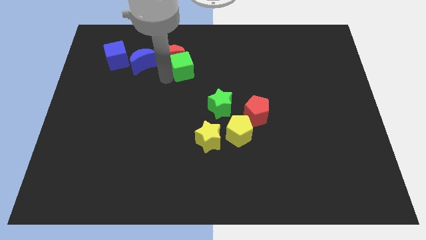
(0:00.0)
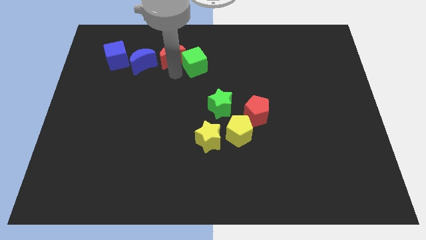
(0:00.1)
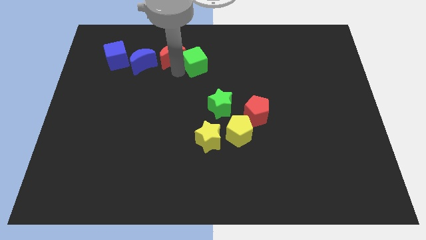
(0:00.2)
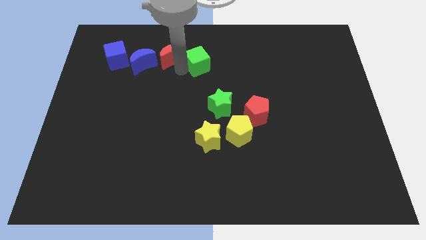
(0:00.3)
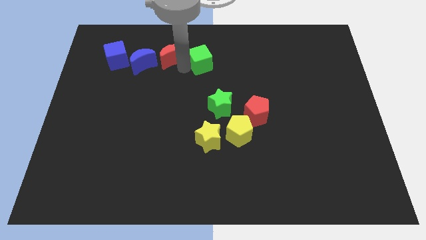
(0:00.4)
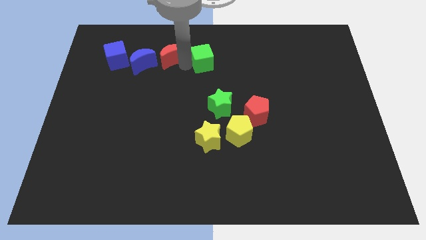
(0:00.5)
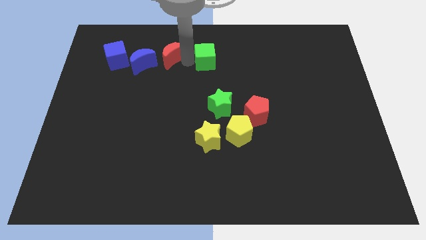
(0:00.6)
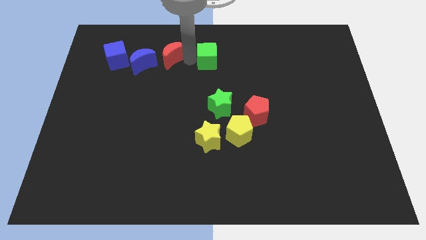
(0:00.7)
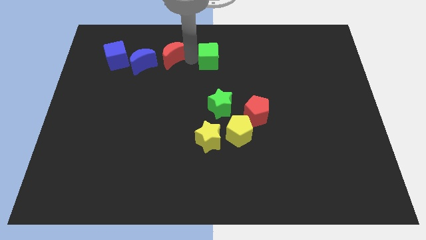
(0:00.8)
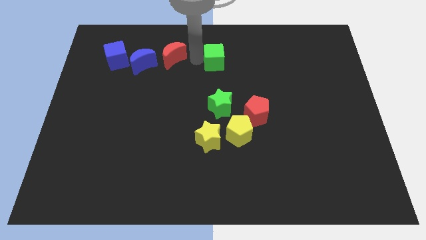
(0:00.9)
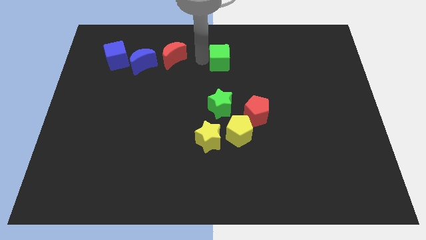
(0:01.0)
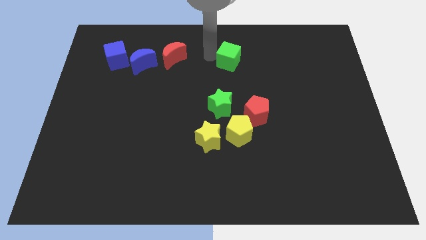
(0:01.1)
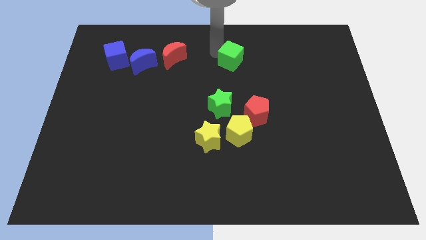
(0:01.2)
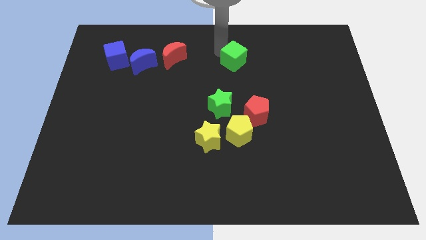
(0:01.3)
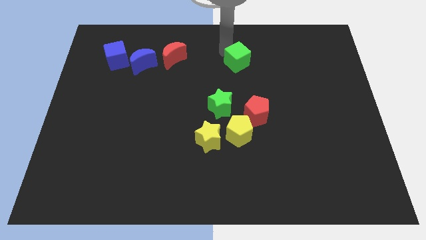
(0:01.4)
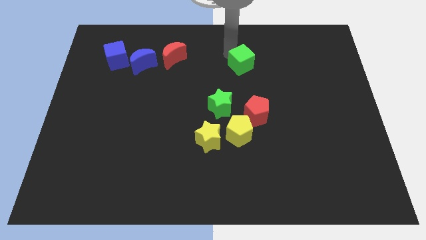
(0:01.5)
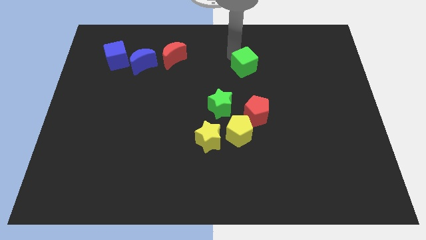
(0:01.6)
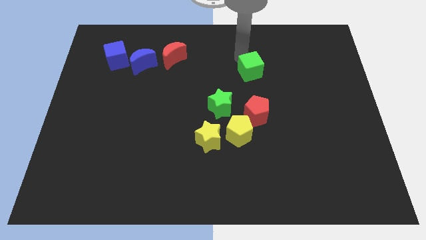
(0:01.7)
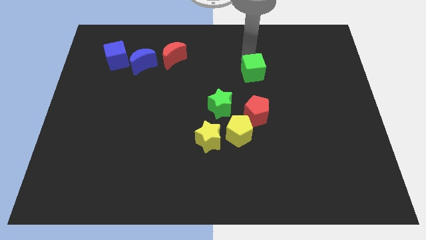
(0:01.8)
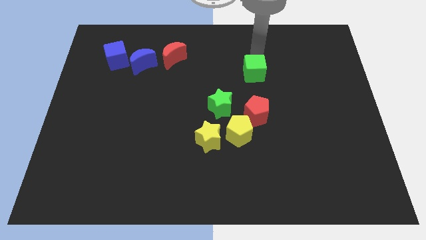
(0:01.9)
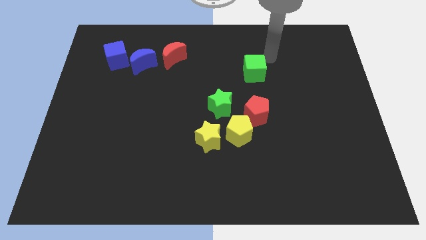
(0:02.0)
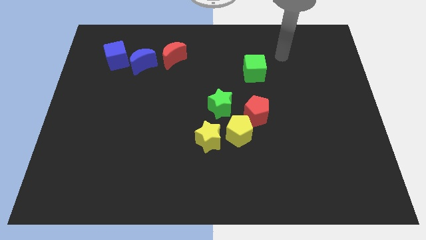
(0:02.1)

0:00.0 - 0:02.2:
push the green cube diagonally to the green star

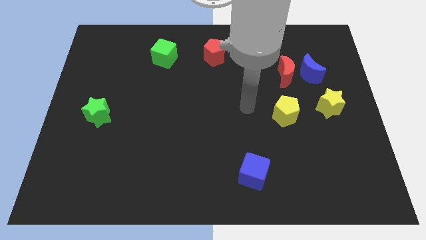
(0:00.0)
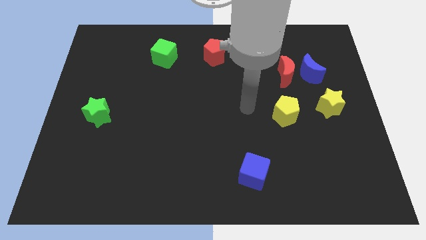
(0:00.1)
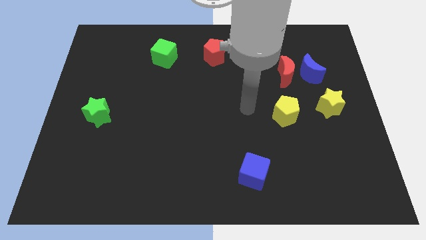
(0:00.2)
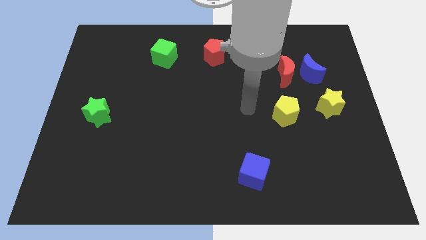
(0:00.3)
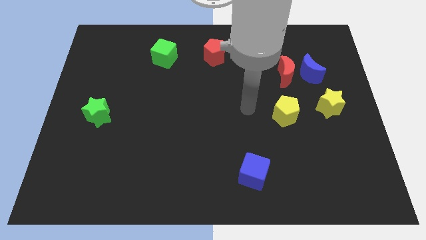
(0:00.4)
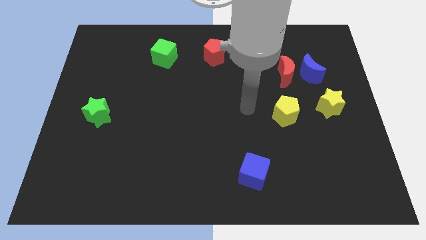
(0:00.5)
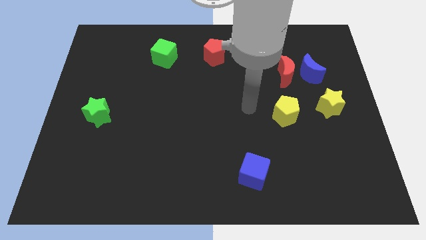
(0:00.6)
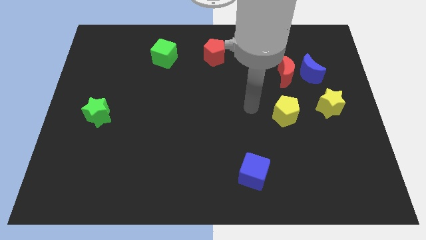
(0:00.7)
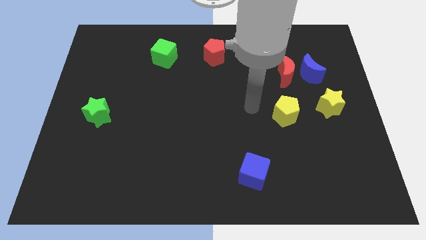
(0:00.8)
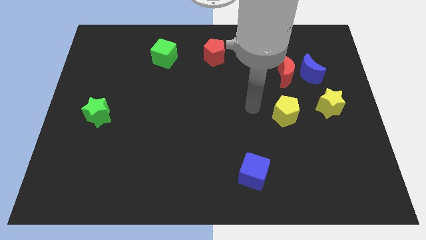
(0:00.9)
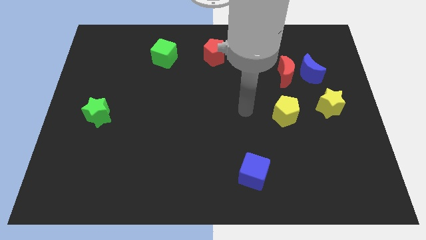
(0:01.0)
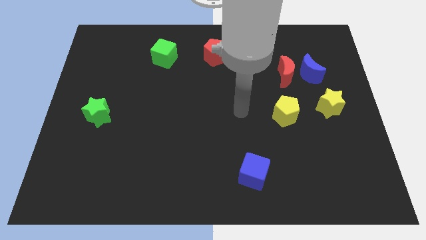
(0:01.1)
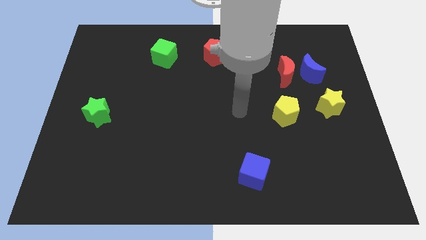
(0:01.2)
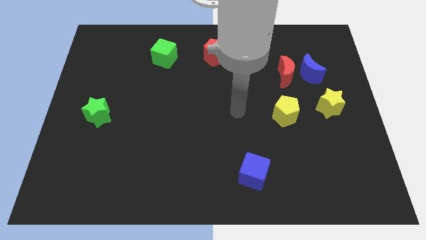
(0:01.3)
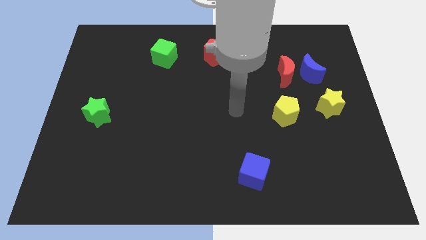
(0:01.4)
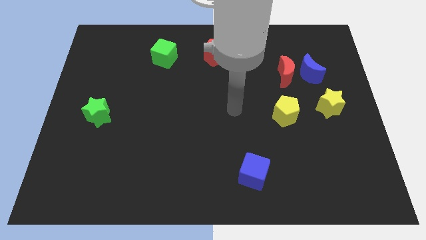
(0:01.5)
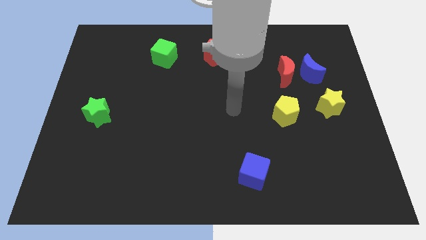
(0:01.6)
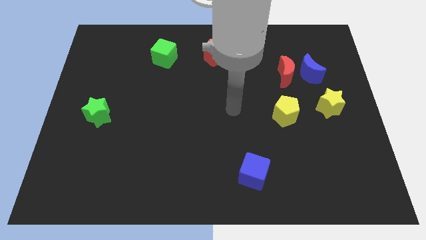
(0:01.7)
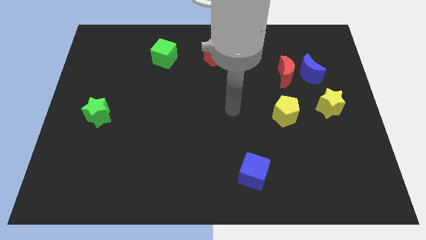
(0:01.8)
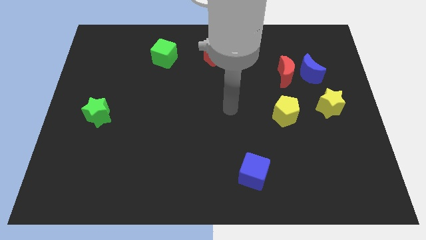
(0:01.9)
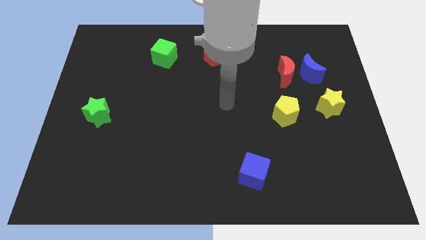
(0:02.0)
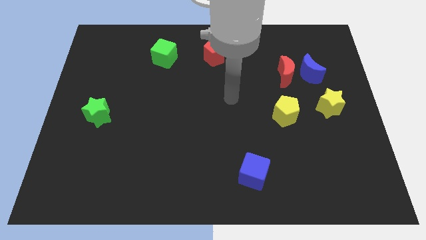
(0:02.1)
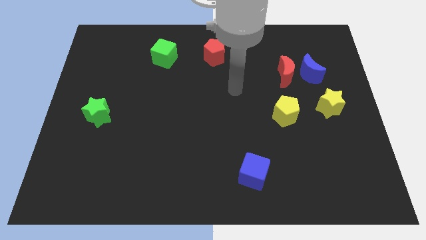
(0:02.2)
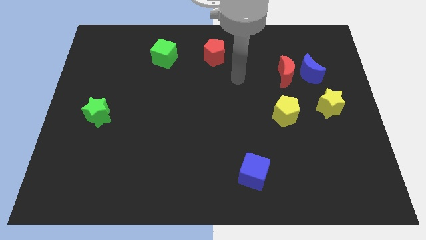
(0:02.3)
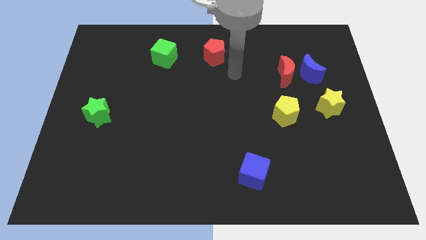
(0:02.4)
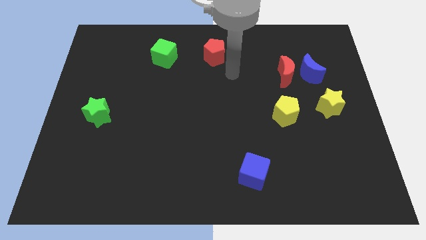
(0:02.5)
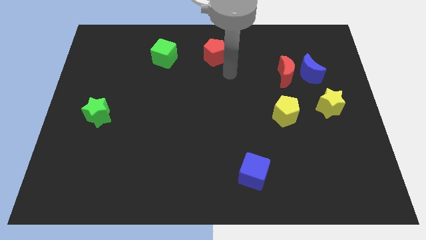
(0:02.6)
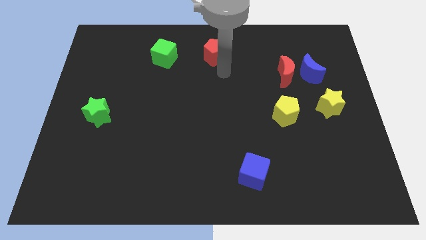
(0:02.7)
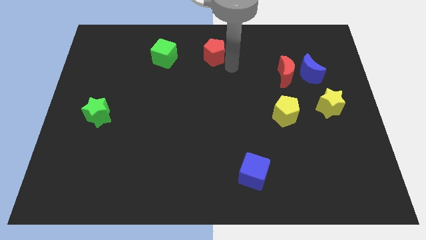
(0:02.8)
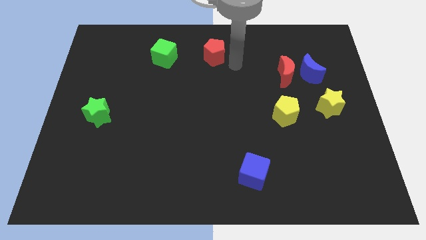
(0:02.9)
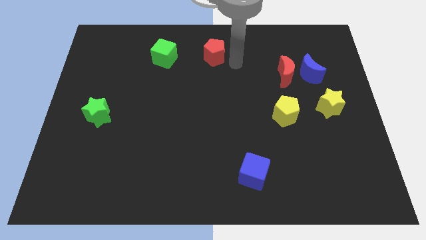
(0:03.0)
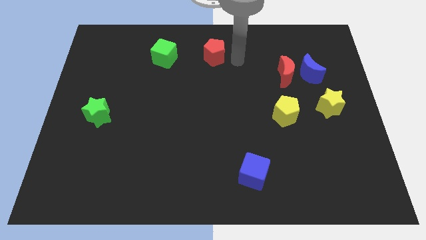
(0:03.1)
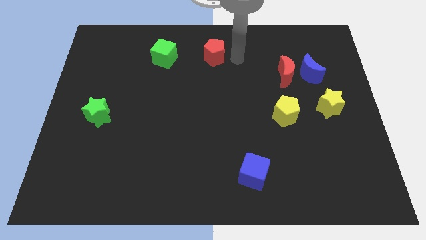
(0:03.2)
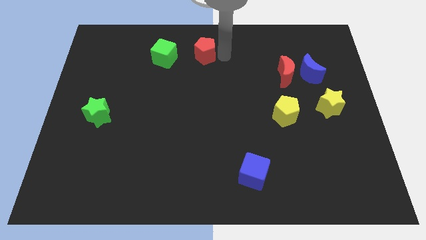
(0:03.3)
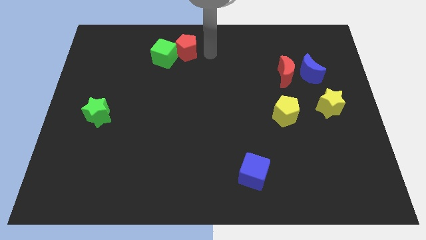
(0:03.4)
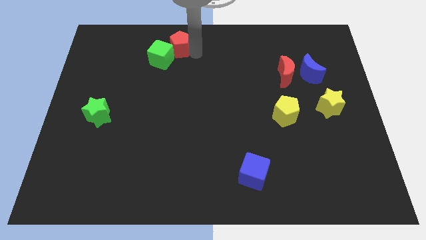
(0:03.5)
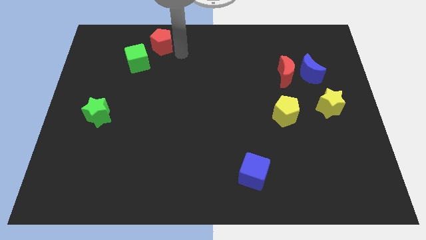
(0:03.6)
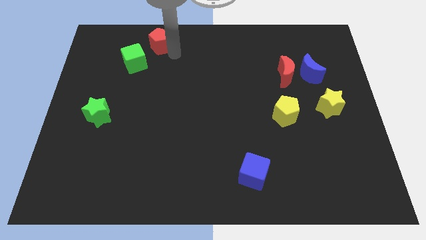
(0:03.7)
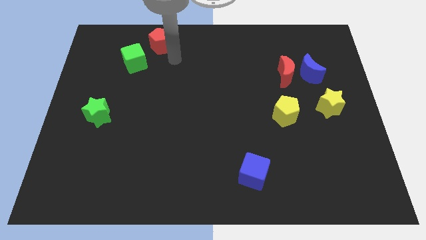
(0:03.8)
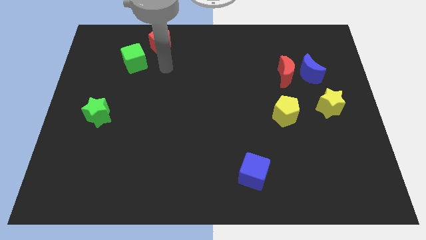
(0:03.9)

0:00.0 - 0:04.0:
slide the red pentagon diagonally to the top right of the green cube

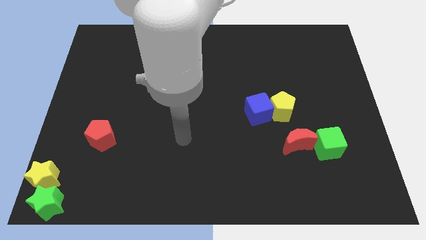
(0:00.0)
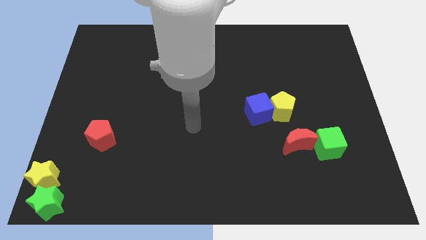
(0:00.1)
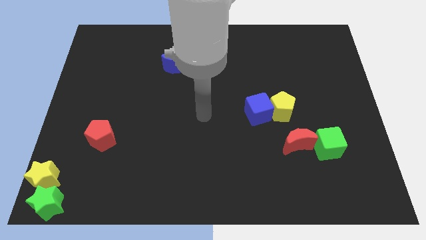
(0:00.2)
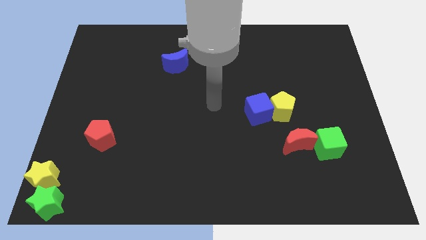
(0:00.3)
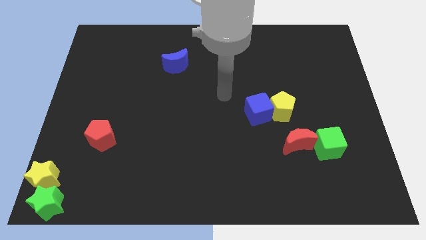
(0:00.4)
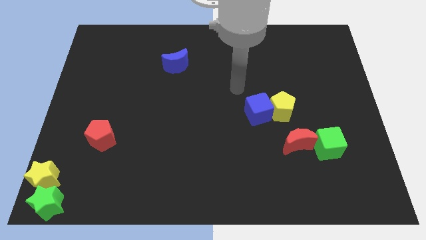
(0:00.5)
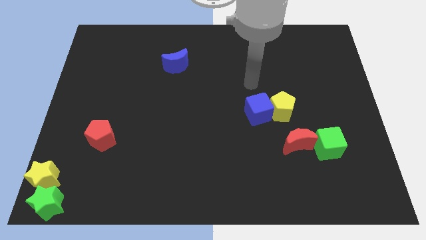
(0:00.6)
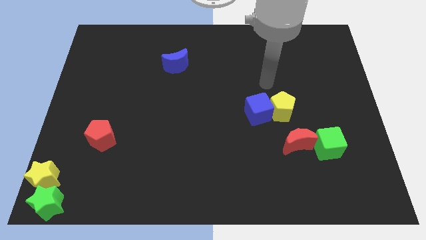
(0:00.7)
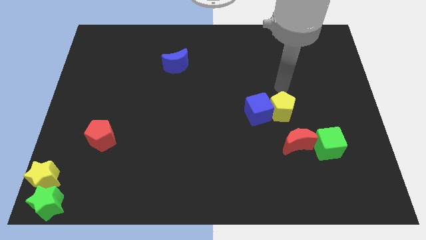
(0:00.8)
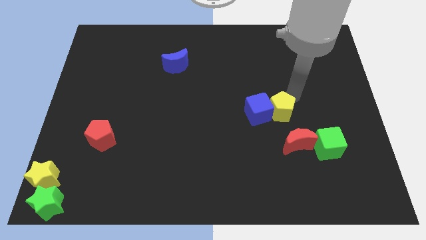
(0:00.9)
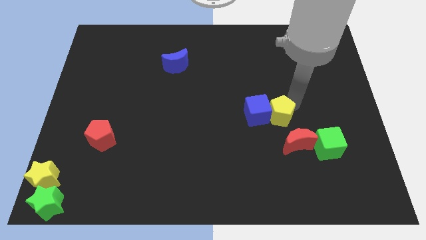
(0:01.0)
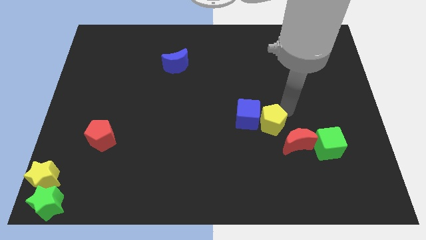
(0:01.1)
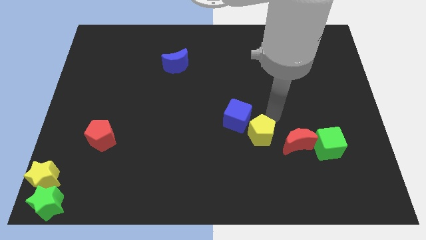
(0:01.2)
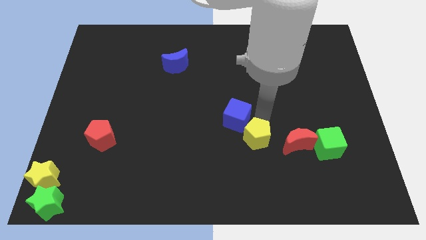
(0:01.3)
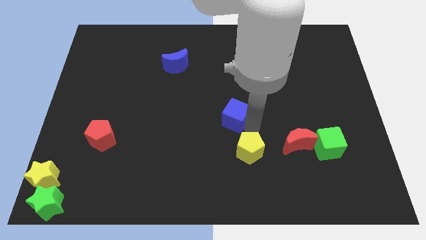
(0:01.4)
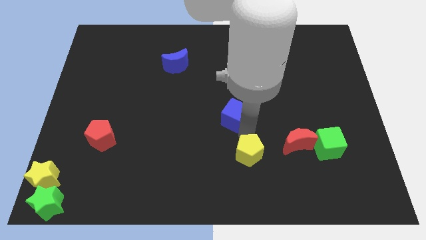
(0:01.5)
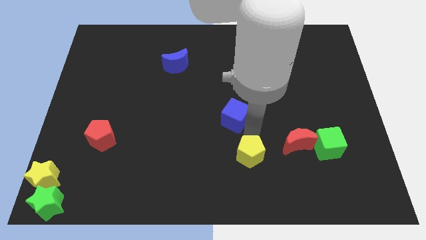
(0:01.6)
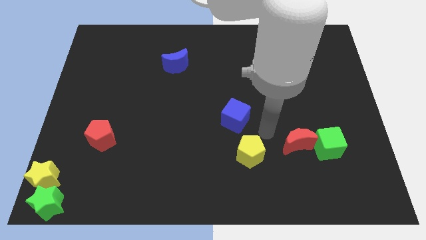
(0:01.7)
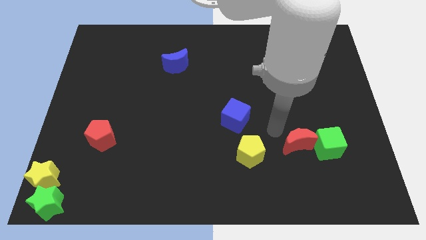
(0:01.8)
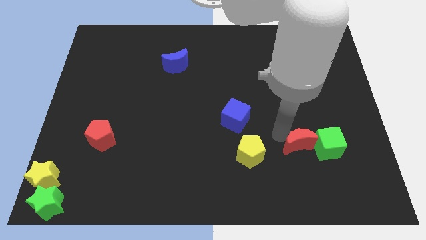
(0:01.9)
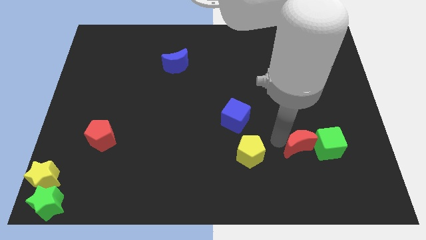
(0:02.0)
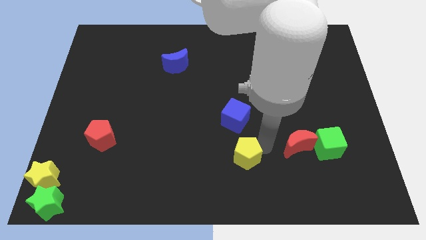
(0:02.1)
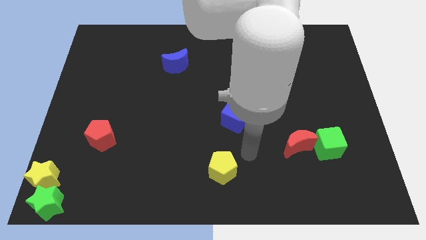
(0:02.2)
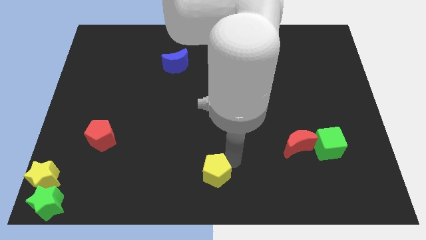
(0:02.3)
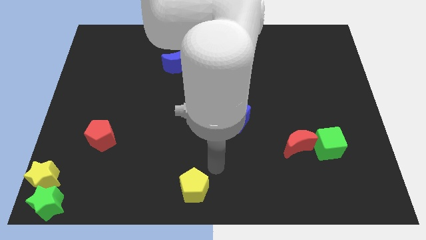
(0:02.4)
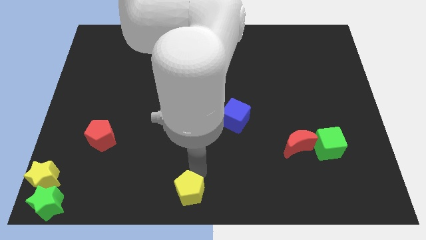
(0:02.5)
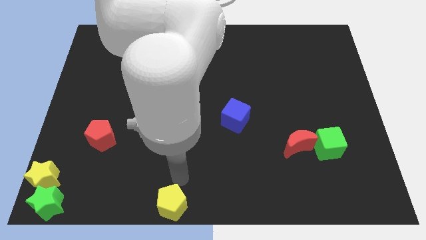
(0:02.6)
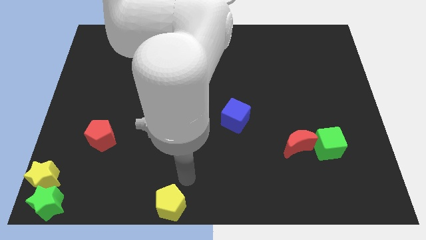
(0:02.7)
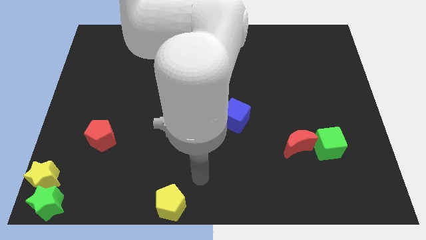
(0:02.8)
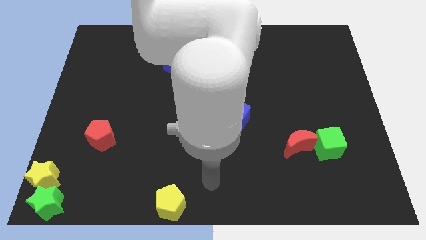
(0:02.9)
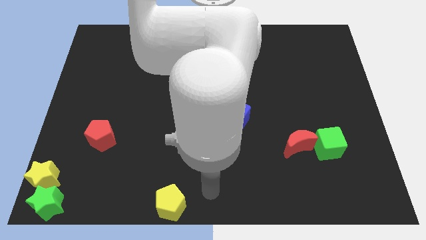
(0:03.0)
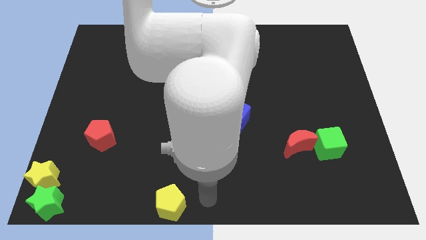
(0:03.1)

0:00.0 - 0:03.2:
move the yellow pentagon to the bottom center of the board
